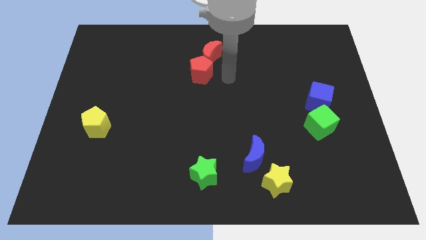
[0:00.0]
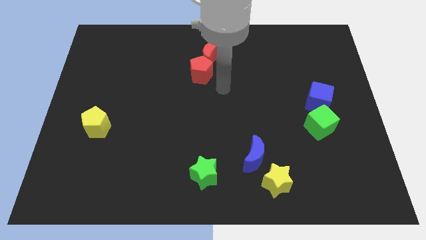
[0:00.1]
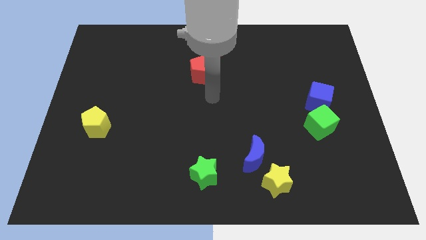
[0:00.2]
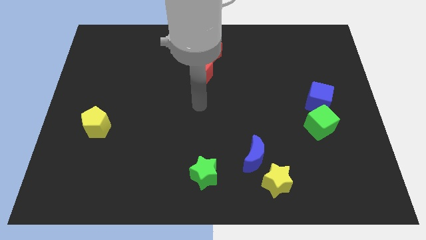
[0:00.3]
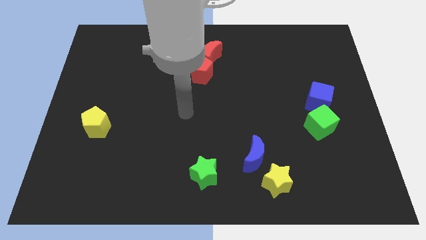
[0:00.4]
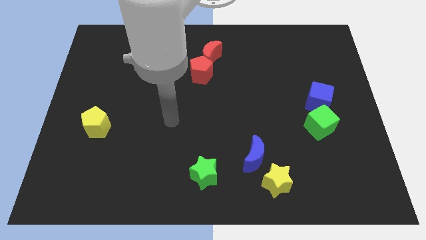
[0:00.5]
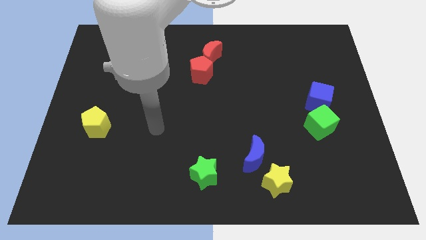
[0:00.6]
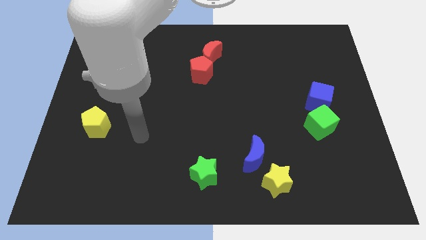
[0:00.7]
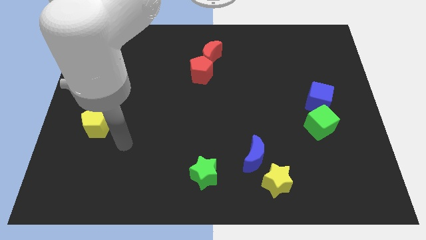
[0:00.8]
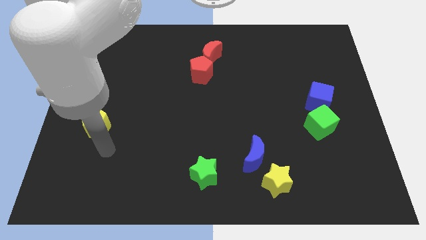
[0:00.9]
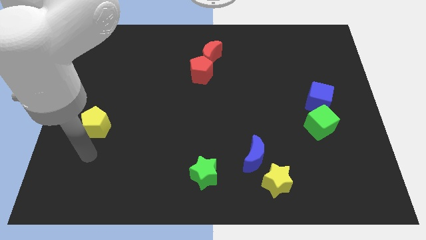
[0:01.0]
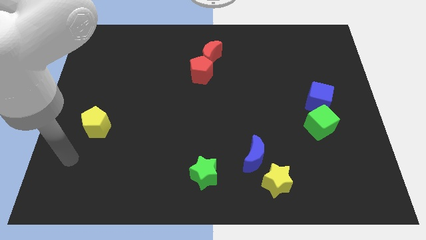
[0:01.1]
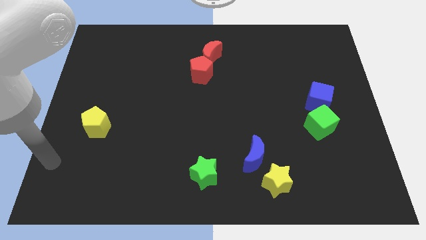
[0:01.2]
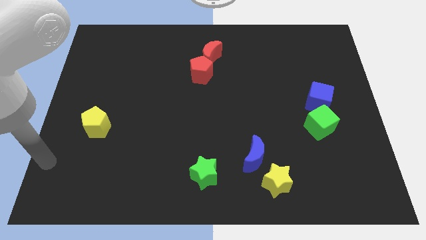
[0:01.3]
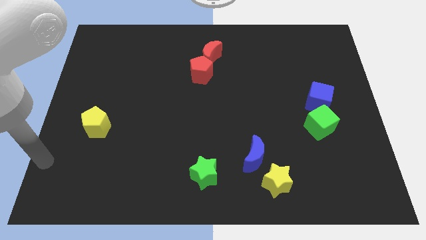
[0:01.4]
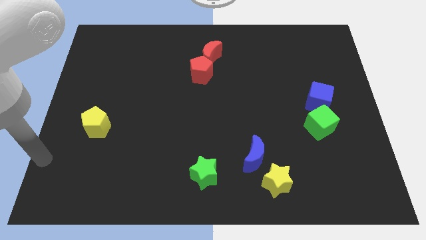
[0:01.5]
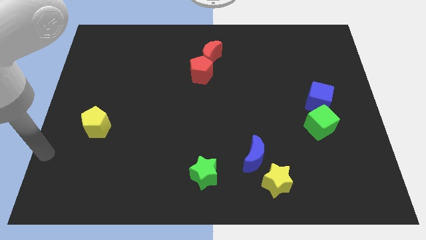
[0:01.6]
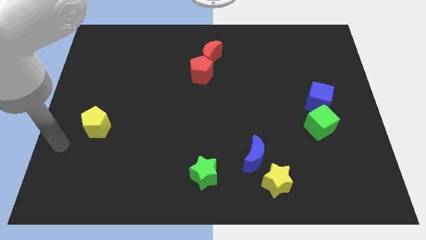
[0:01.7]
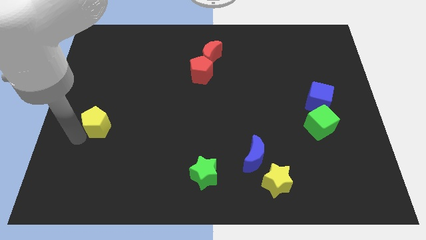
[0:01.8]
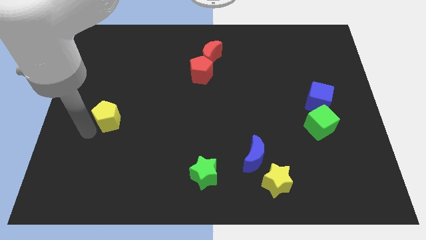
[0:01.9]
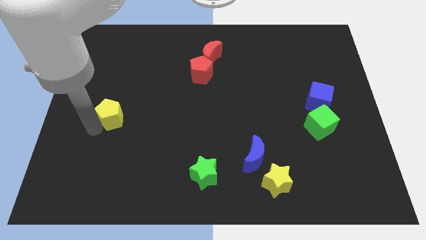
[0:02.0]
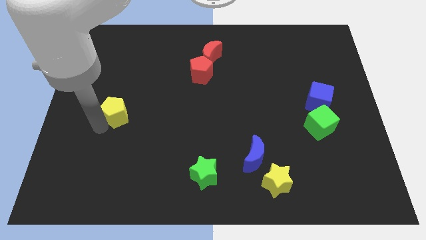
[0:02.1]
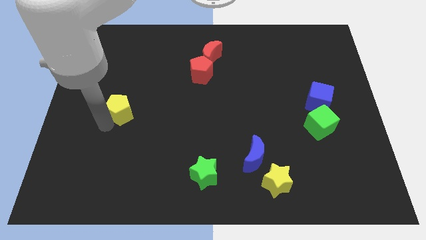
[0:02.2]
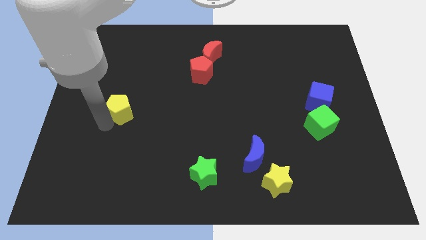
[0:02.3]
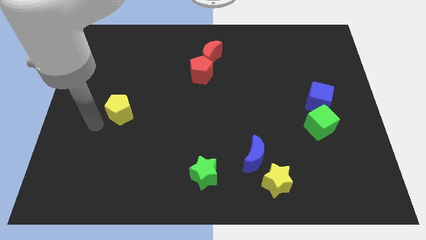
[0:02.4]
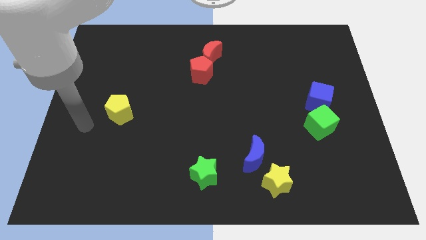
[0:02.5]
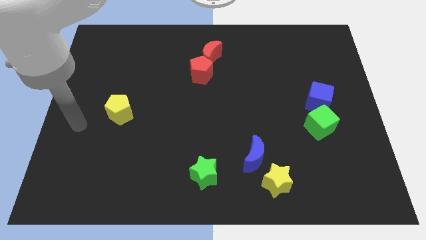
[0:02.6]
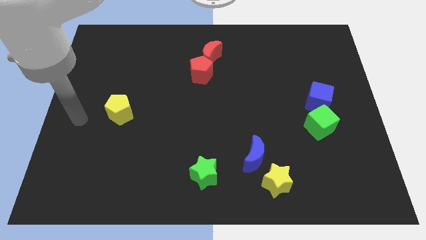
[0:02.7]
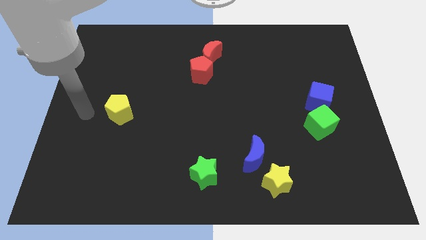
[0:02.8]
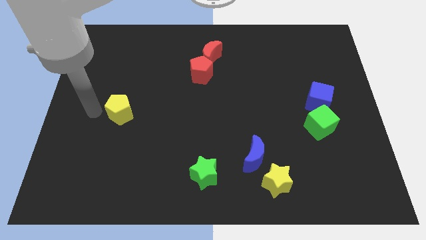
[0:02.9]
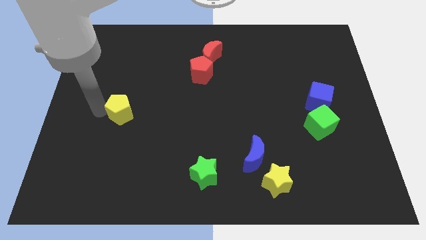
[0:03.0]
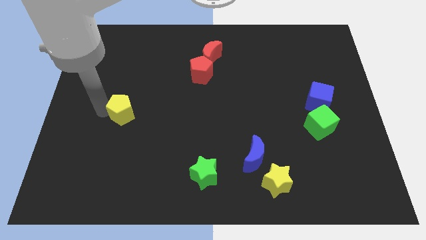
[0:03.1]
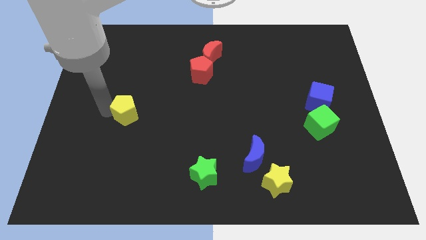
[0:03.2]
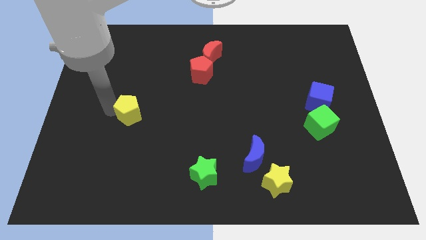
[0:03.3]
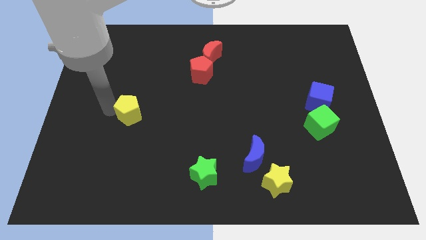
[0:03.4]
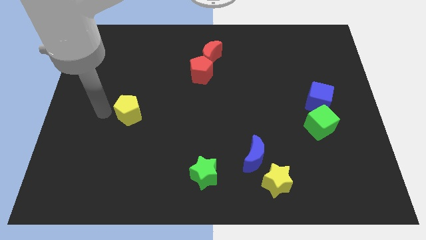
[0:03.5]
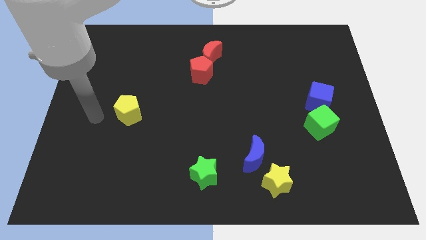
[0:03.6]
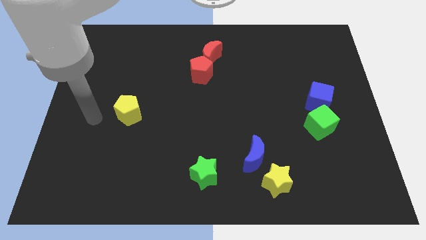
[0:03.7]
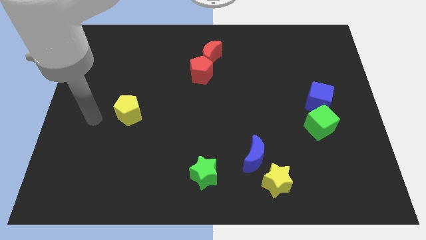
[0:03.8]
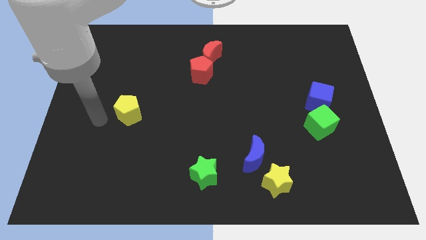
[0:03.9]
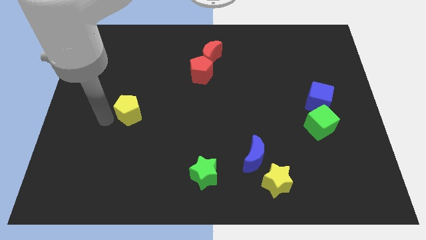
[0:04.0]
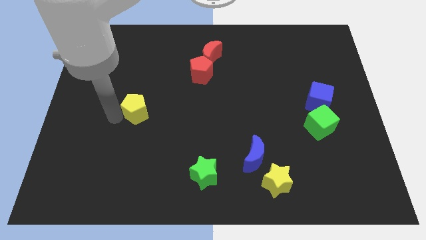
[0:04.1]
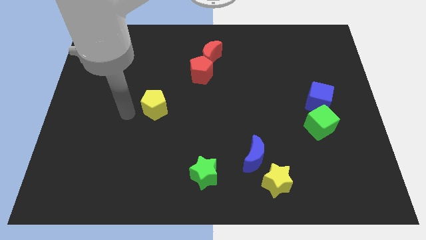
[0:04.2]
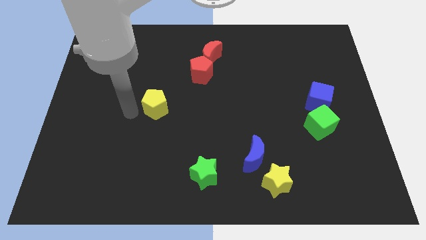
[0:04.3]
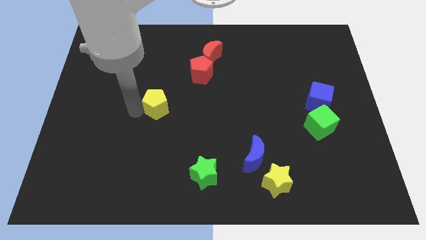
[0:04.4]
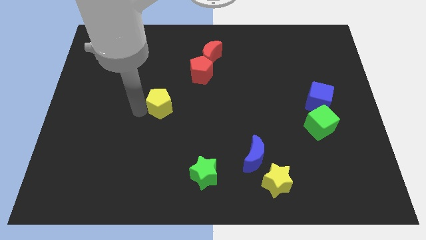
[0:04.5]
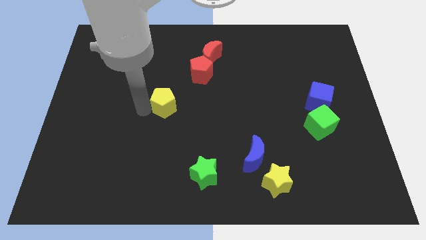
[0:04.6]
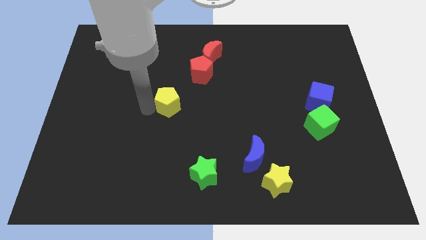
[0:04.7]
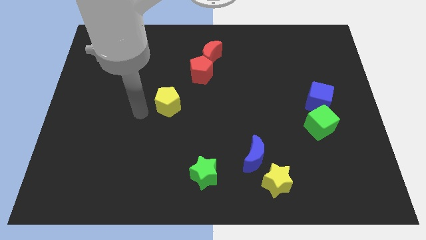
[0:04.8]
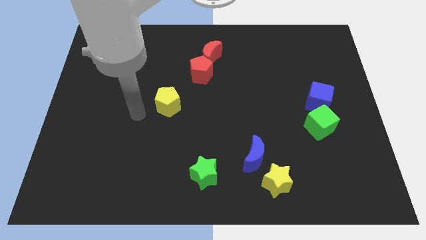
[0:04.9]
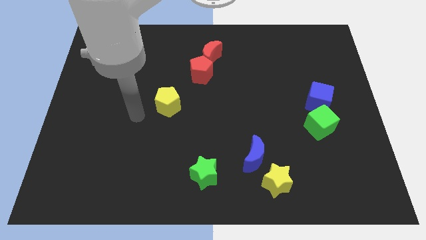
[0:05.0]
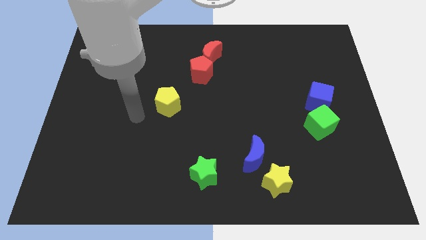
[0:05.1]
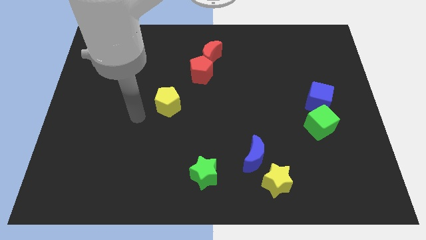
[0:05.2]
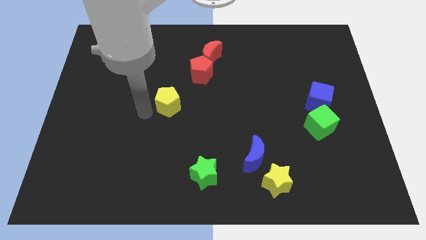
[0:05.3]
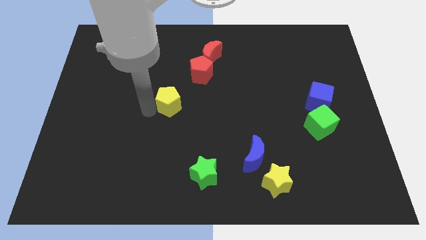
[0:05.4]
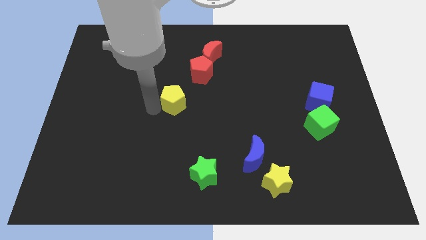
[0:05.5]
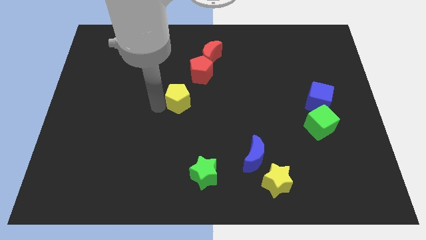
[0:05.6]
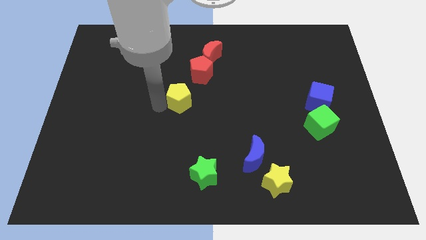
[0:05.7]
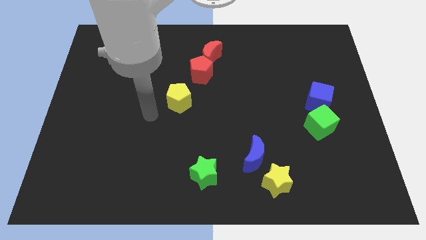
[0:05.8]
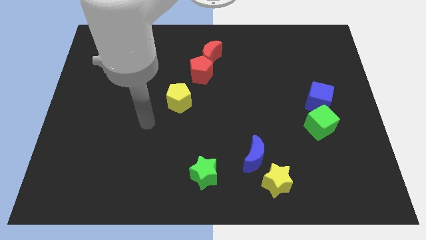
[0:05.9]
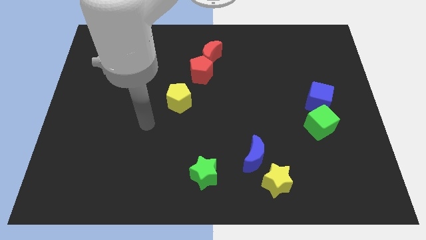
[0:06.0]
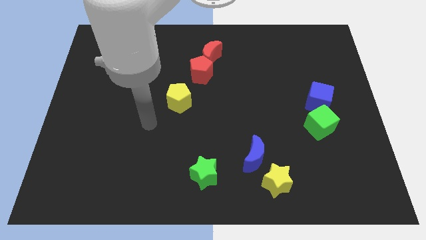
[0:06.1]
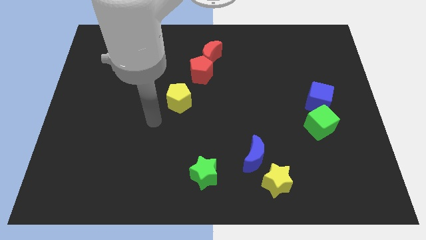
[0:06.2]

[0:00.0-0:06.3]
place the yellow pentagon diagonally bottom left to the red crescent

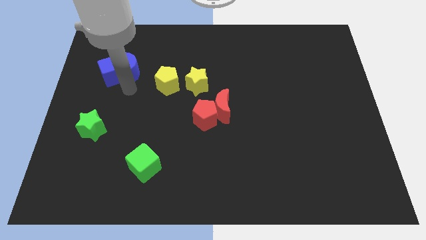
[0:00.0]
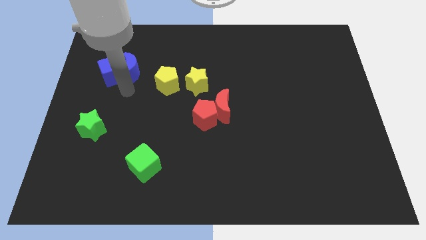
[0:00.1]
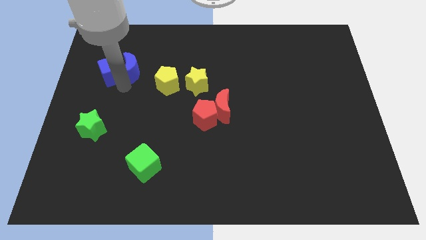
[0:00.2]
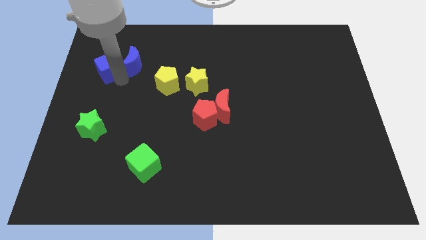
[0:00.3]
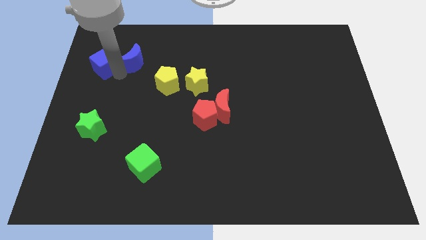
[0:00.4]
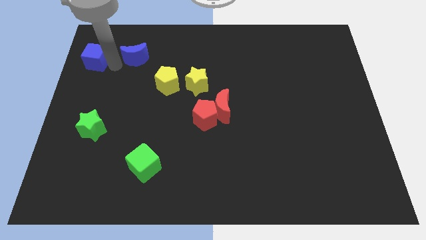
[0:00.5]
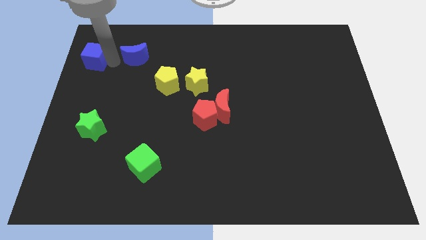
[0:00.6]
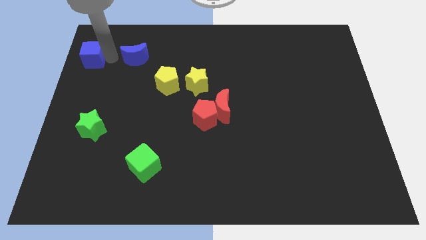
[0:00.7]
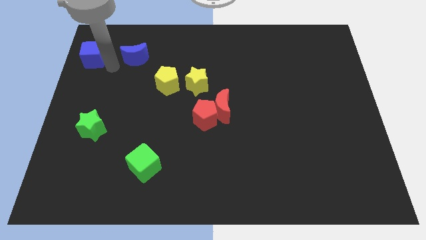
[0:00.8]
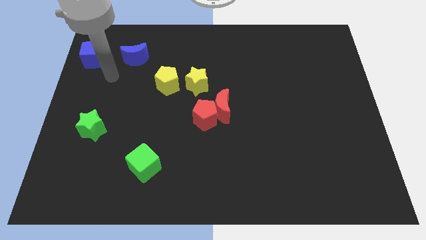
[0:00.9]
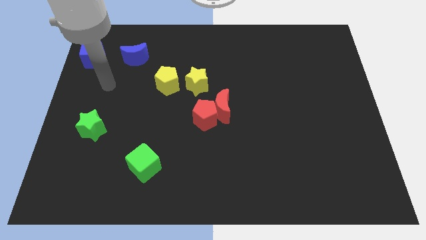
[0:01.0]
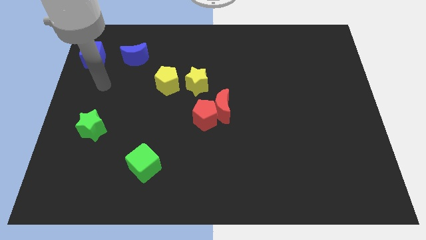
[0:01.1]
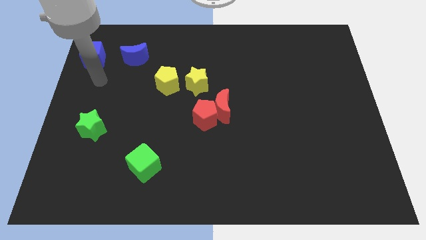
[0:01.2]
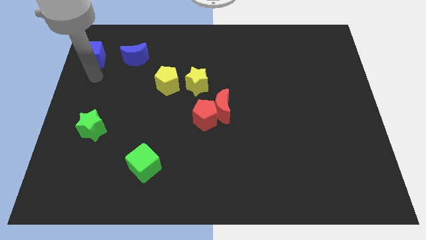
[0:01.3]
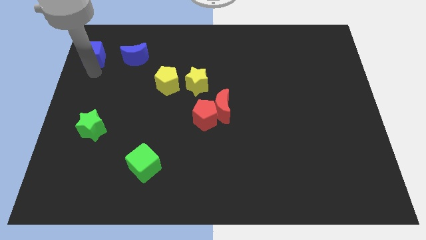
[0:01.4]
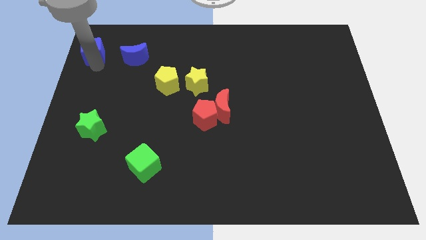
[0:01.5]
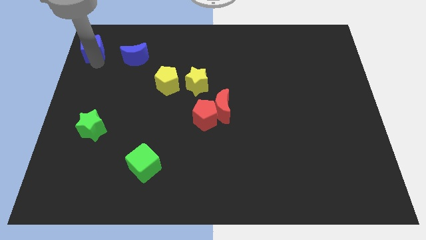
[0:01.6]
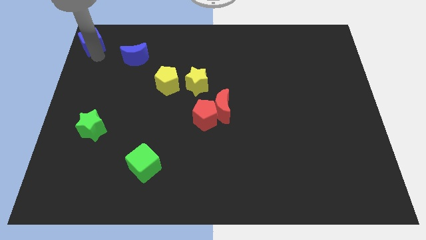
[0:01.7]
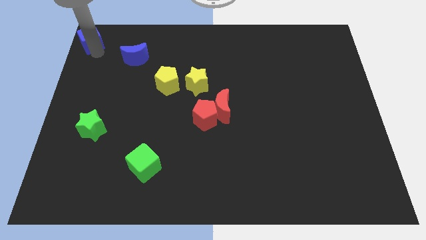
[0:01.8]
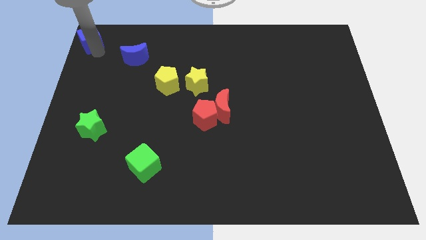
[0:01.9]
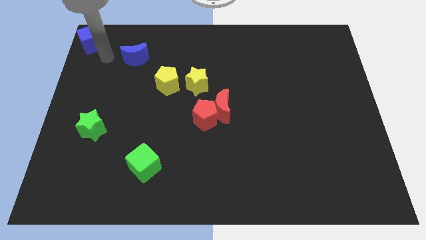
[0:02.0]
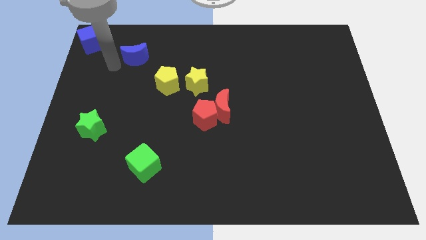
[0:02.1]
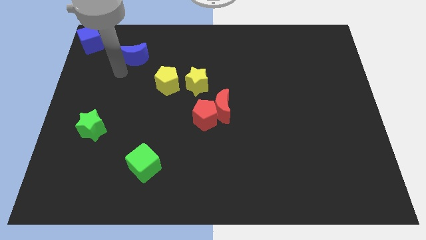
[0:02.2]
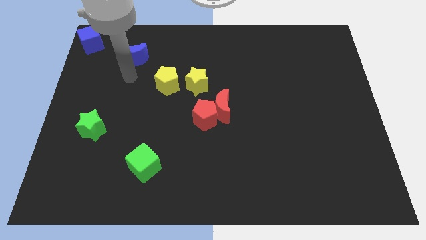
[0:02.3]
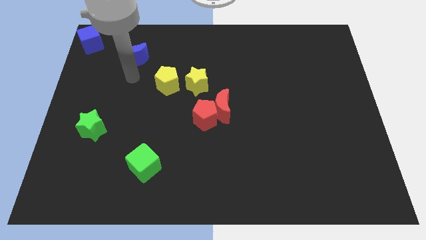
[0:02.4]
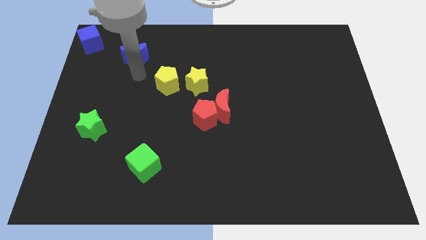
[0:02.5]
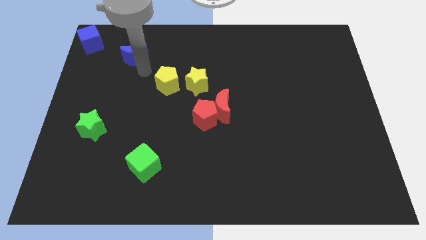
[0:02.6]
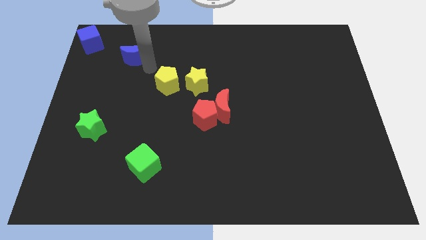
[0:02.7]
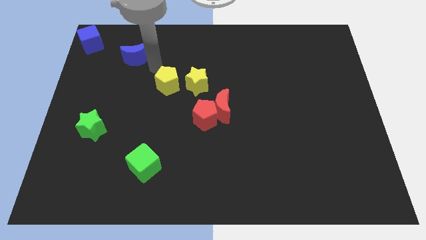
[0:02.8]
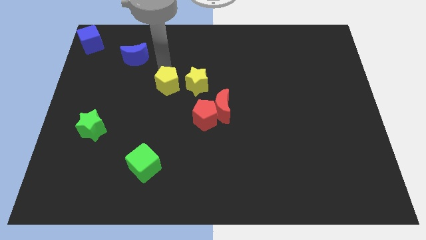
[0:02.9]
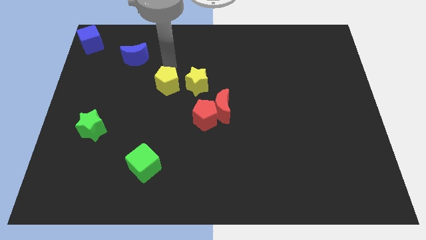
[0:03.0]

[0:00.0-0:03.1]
separate the blue moon and blue cube
